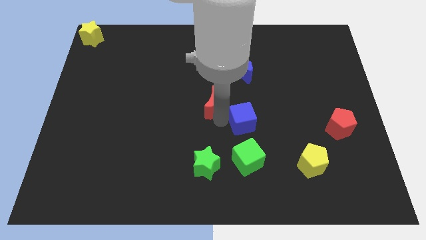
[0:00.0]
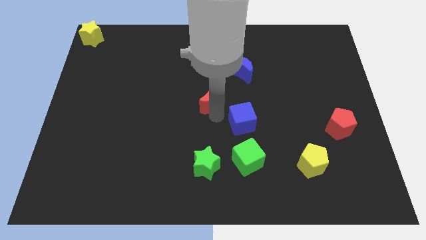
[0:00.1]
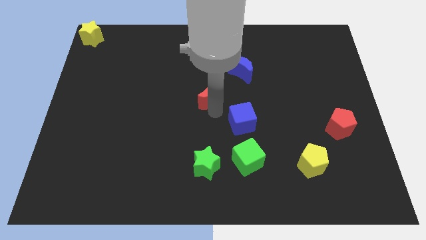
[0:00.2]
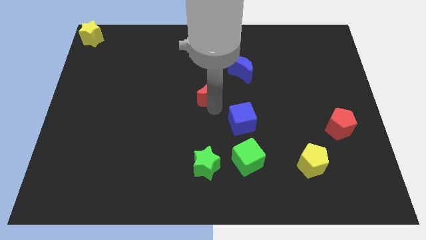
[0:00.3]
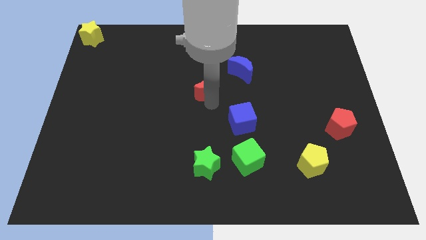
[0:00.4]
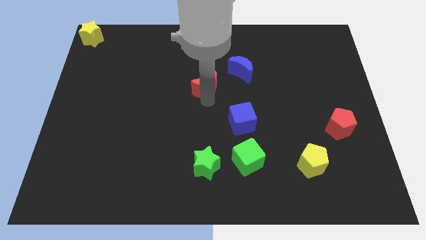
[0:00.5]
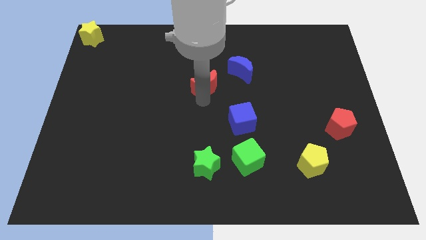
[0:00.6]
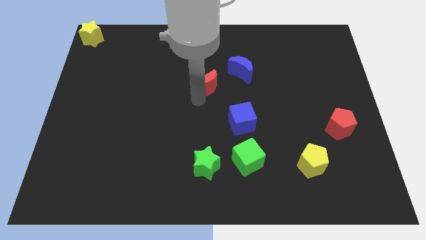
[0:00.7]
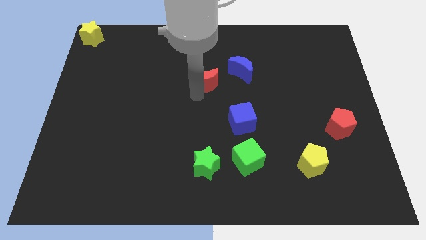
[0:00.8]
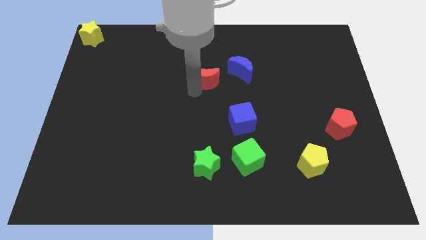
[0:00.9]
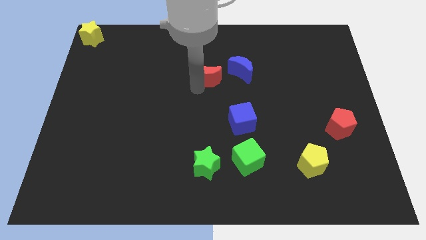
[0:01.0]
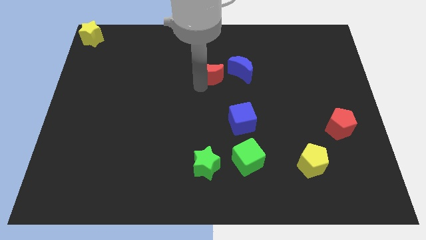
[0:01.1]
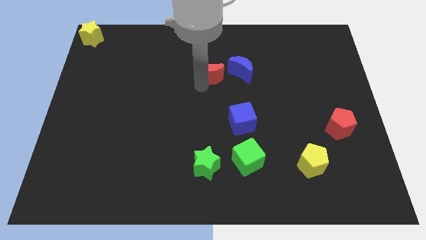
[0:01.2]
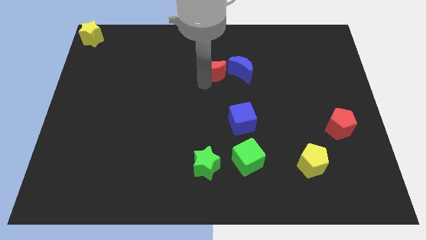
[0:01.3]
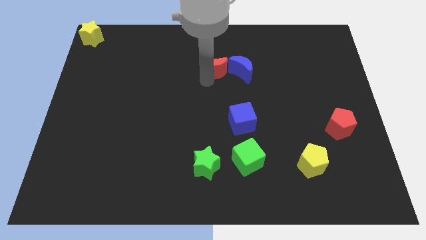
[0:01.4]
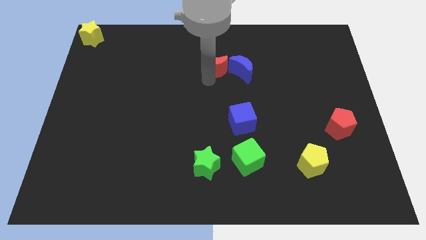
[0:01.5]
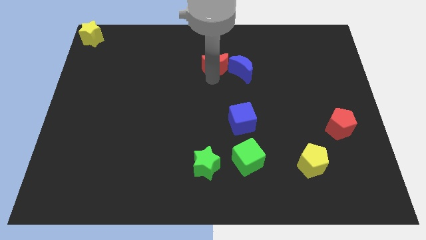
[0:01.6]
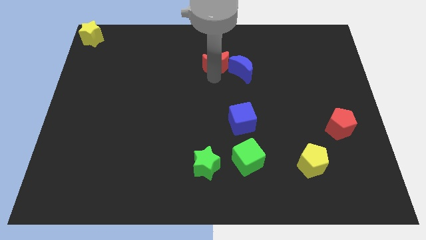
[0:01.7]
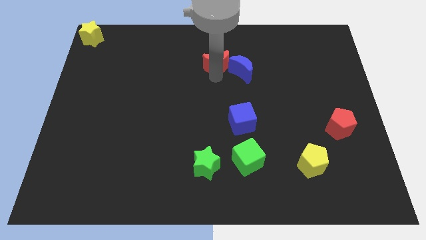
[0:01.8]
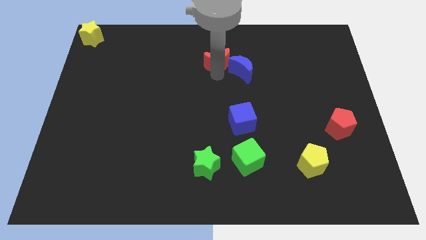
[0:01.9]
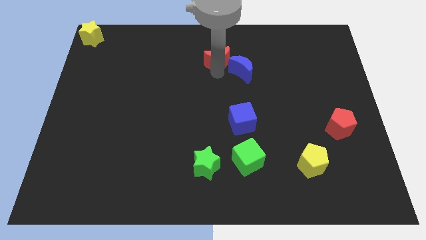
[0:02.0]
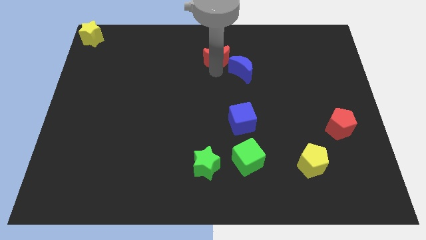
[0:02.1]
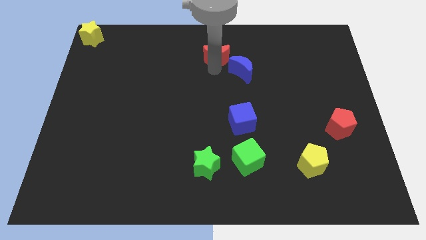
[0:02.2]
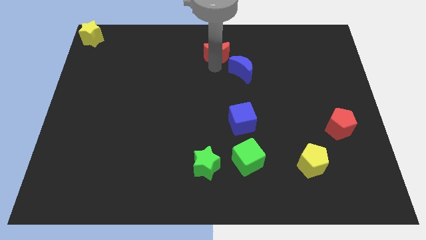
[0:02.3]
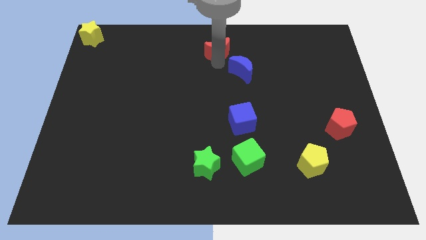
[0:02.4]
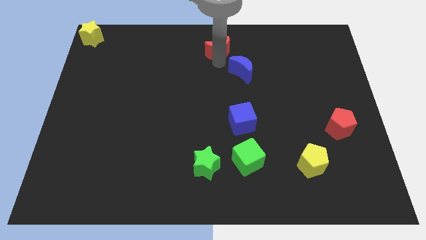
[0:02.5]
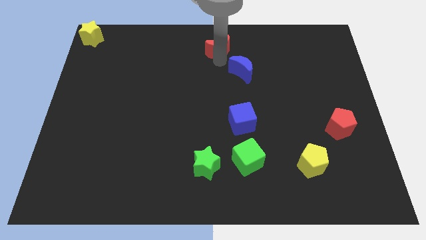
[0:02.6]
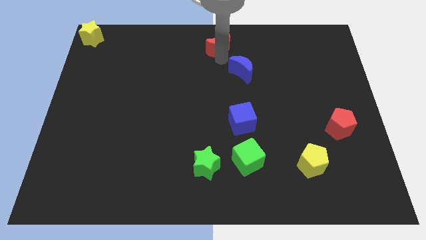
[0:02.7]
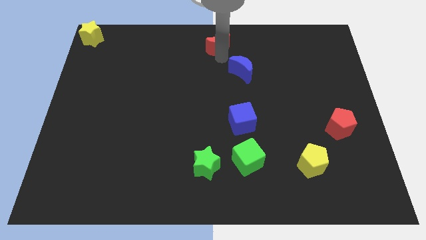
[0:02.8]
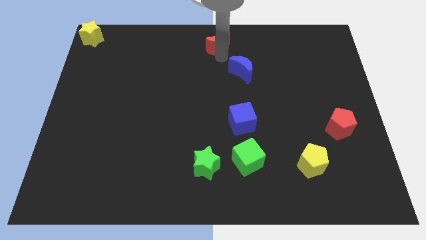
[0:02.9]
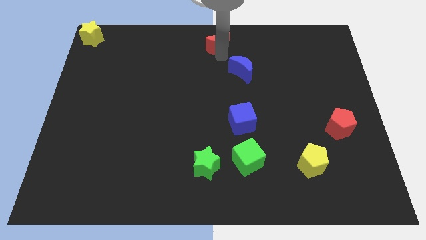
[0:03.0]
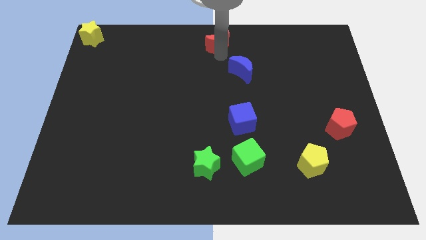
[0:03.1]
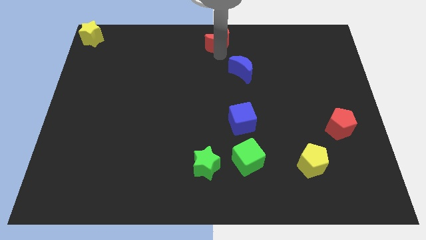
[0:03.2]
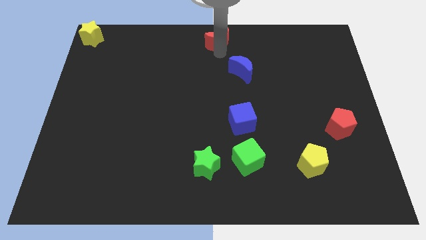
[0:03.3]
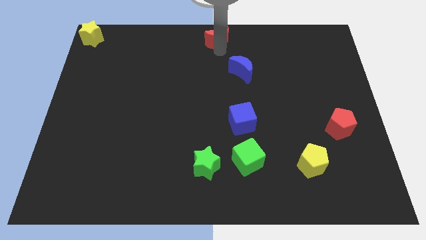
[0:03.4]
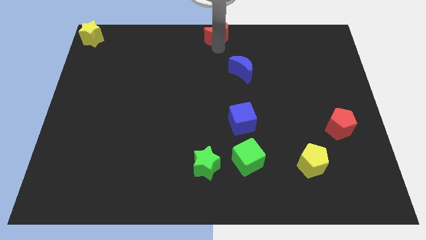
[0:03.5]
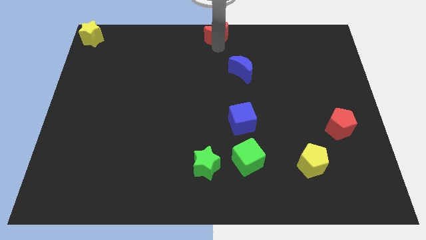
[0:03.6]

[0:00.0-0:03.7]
push the red crescent to the top center of the board

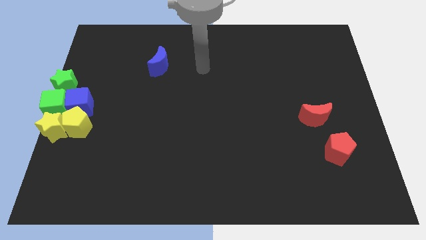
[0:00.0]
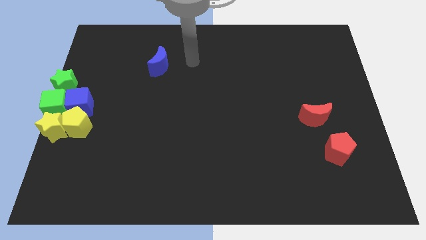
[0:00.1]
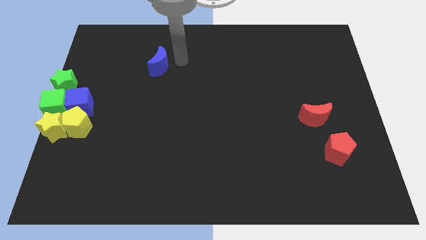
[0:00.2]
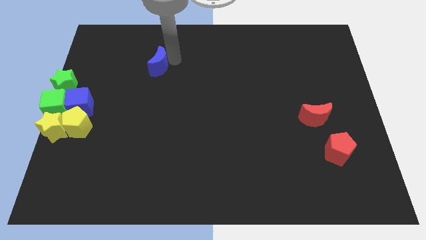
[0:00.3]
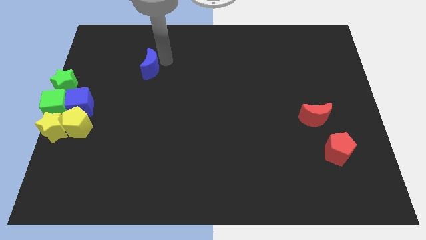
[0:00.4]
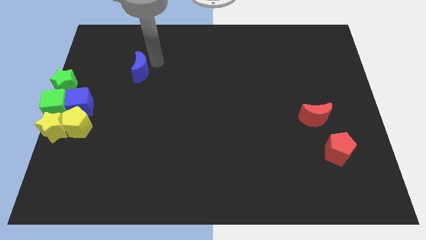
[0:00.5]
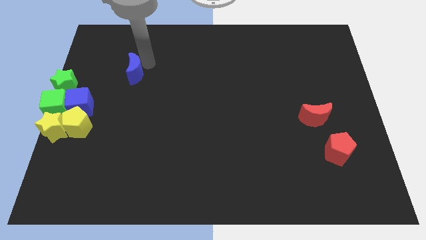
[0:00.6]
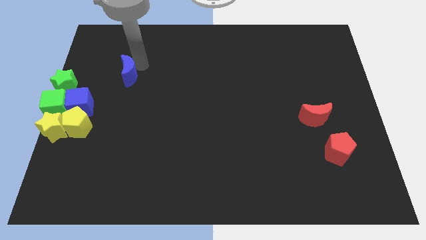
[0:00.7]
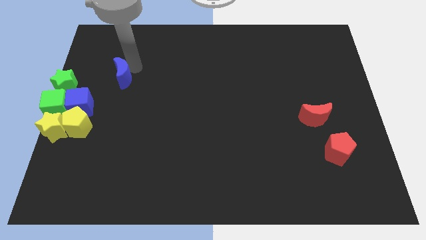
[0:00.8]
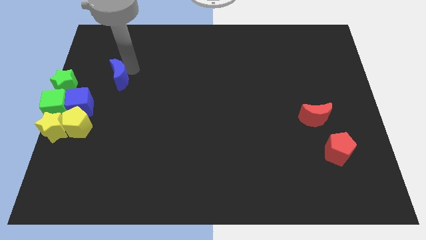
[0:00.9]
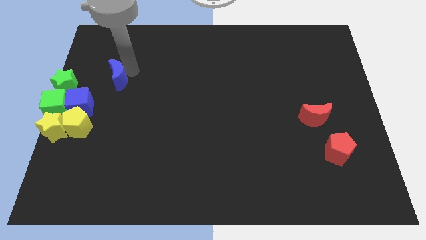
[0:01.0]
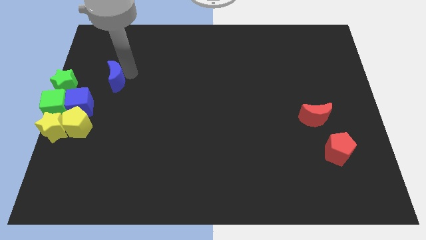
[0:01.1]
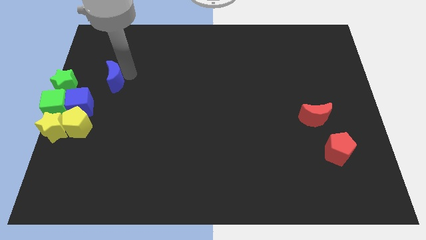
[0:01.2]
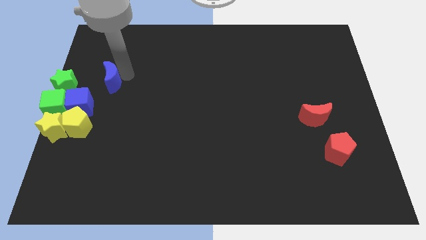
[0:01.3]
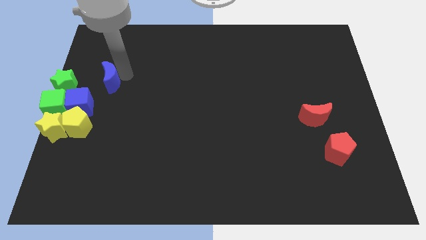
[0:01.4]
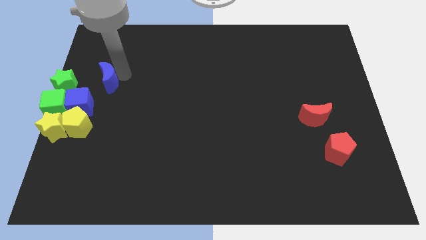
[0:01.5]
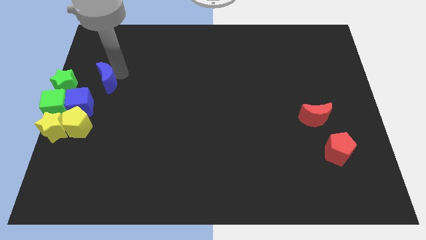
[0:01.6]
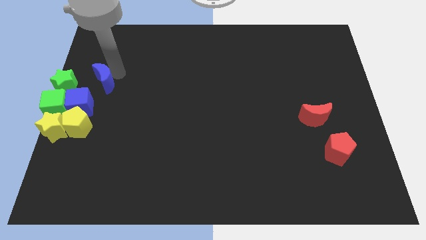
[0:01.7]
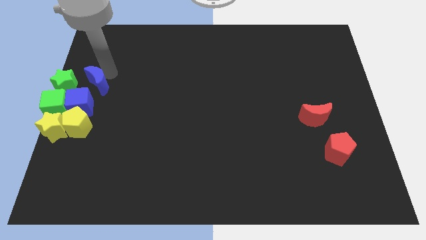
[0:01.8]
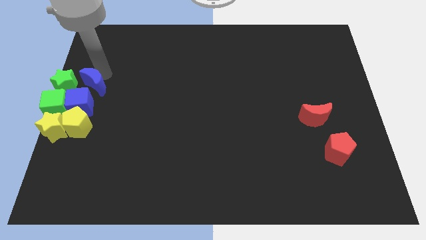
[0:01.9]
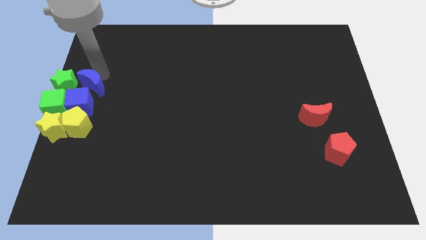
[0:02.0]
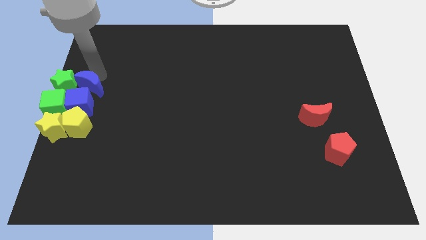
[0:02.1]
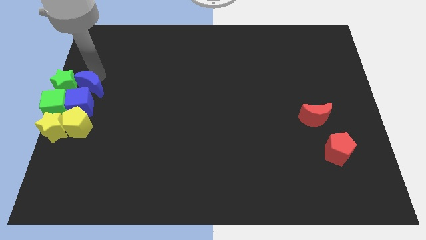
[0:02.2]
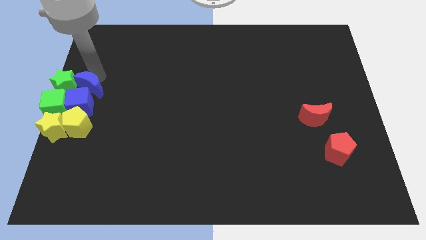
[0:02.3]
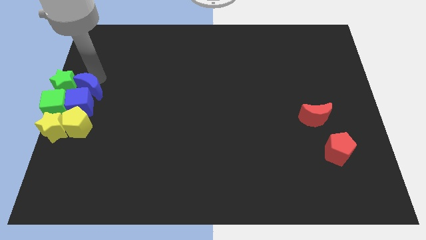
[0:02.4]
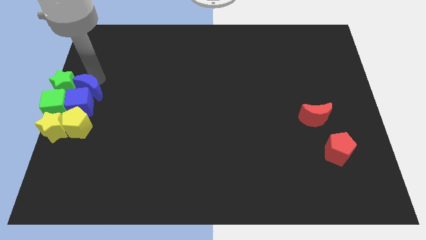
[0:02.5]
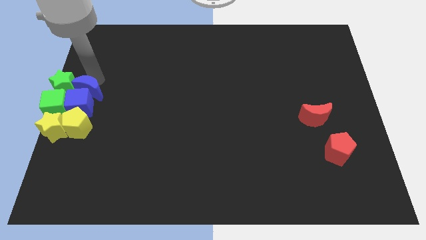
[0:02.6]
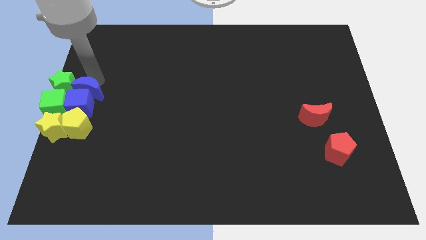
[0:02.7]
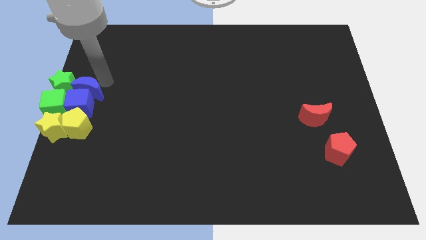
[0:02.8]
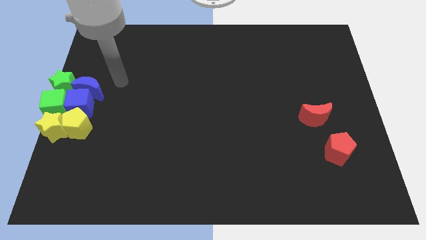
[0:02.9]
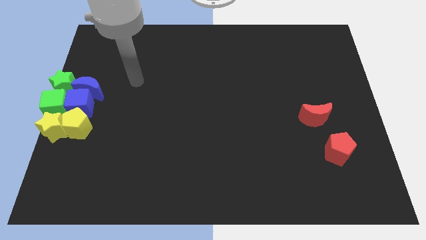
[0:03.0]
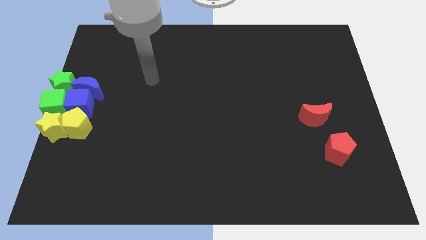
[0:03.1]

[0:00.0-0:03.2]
push the blue moon into blue cube

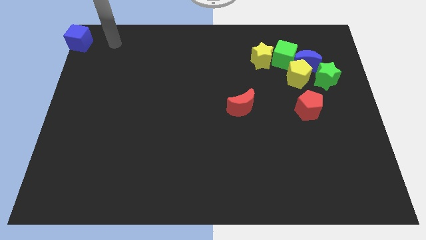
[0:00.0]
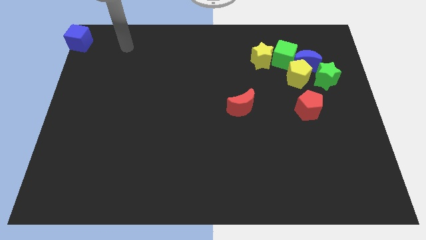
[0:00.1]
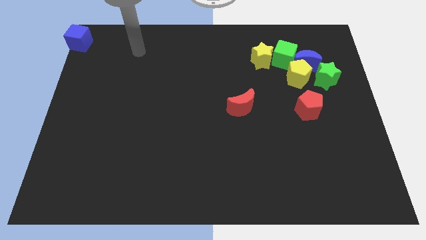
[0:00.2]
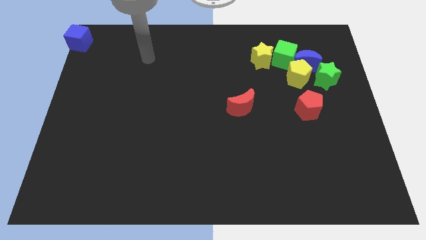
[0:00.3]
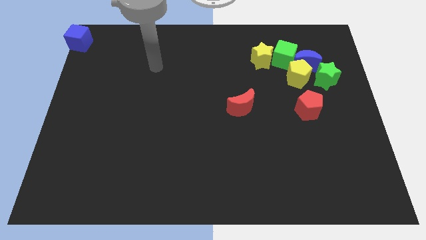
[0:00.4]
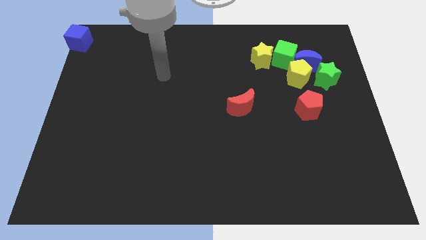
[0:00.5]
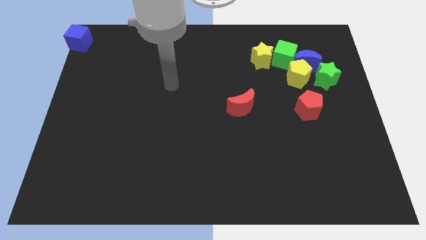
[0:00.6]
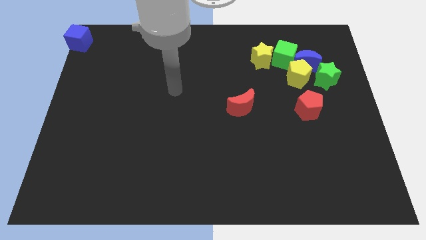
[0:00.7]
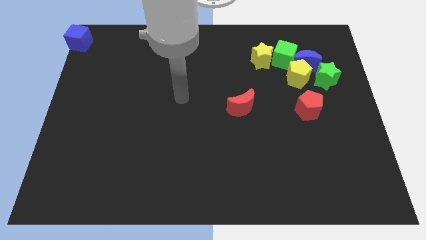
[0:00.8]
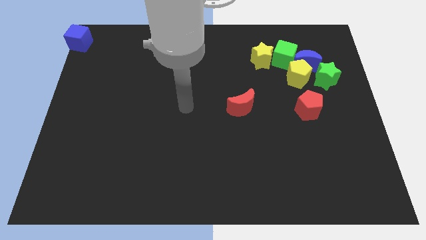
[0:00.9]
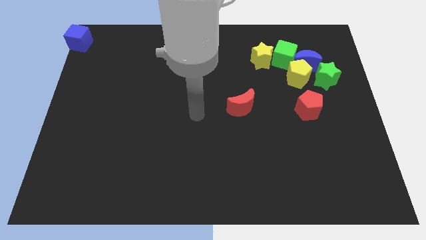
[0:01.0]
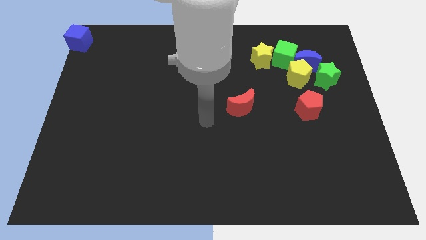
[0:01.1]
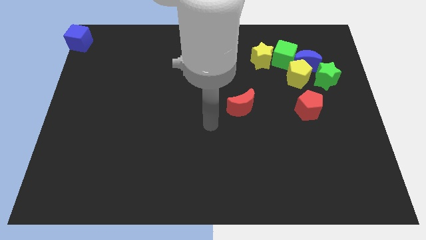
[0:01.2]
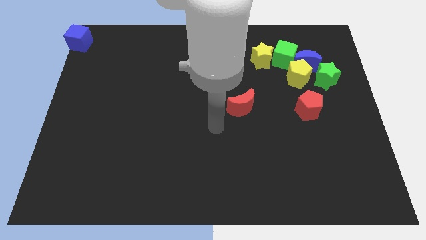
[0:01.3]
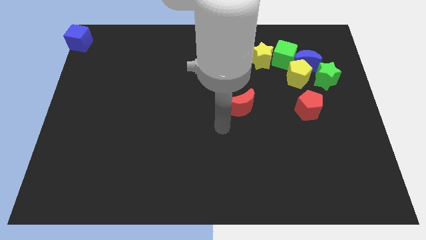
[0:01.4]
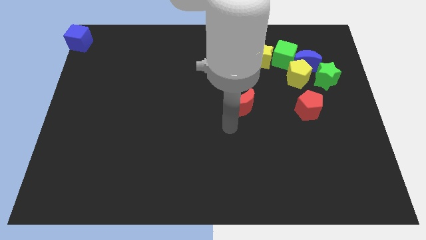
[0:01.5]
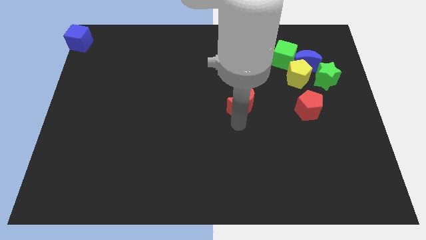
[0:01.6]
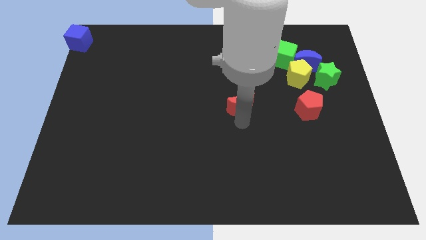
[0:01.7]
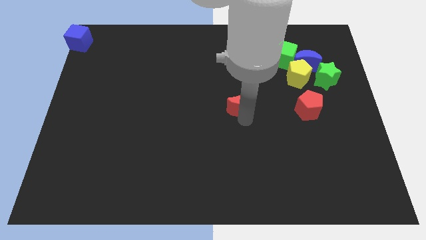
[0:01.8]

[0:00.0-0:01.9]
place the arm below the red moon
